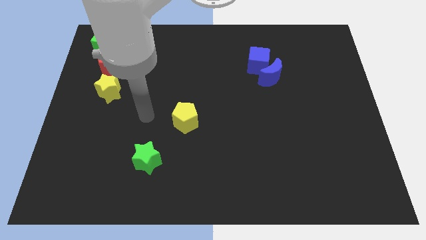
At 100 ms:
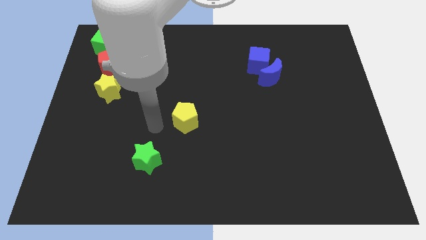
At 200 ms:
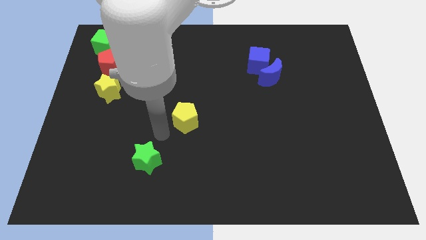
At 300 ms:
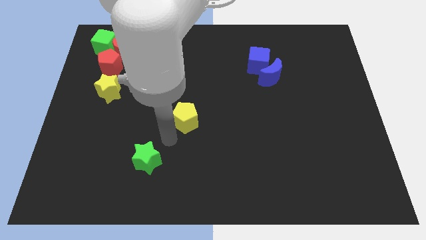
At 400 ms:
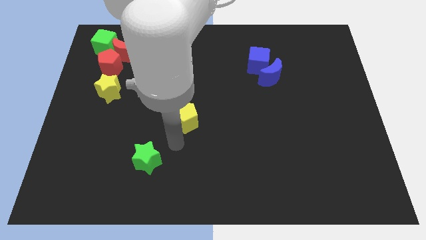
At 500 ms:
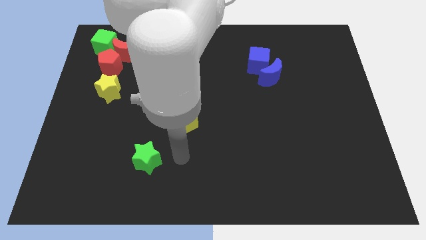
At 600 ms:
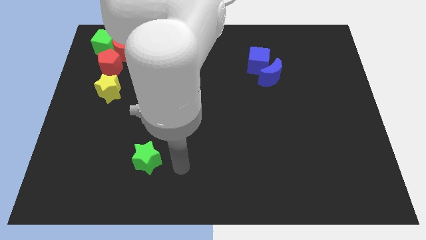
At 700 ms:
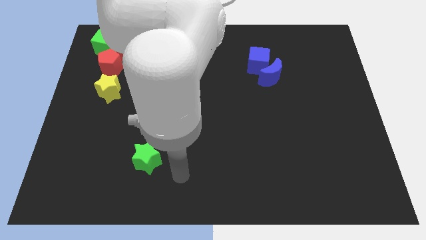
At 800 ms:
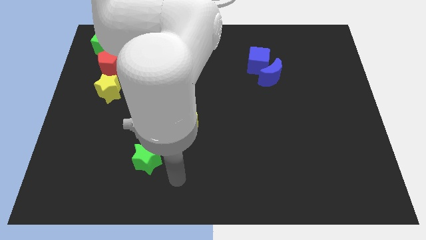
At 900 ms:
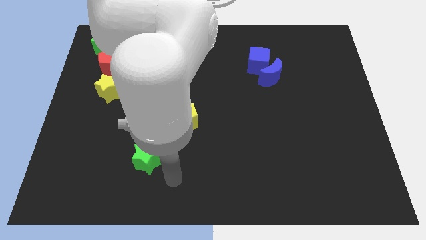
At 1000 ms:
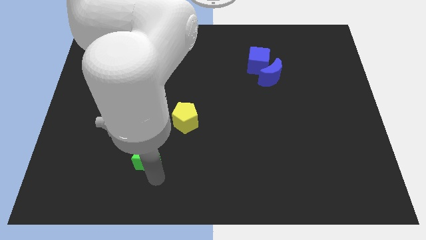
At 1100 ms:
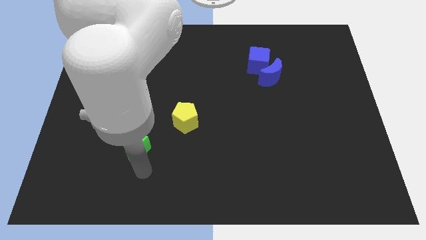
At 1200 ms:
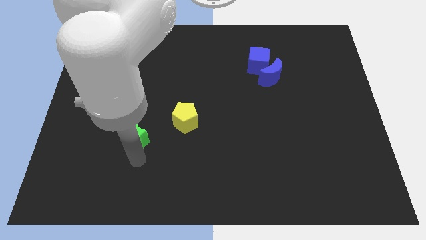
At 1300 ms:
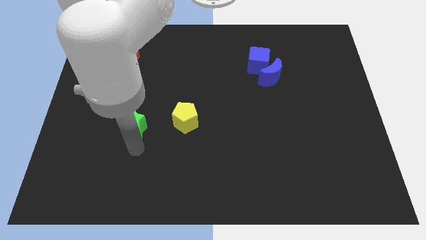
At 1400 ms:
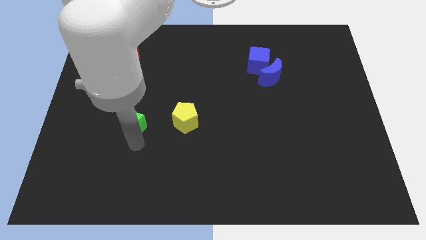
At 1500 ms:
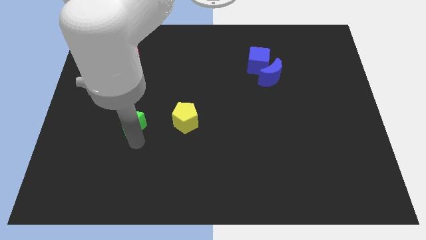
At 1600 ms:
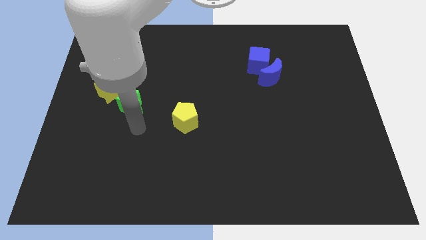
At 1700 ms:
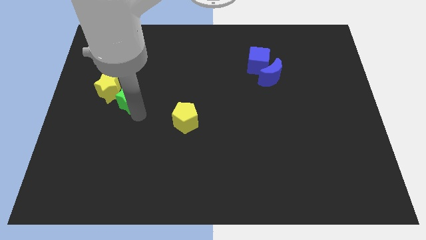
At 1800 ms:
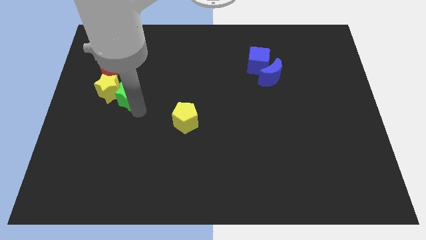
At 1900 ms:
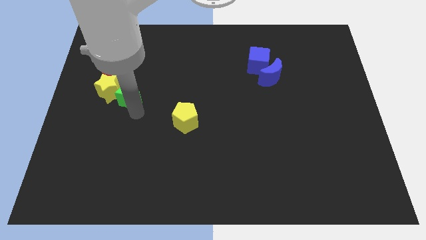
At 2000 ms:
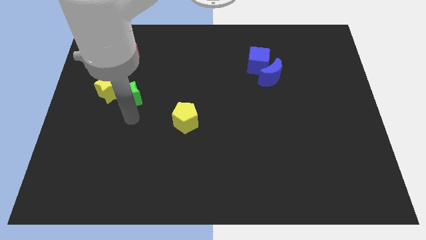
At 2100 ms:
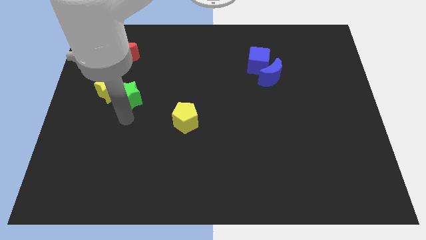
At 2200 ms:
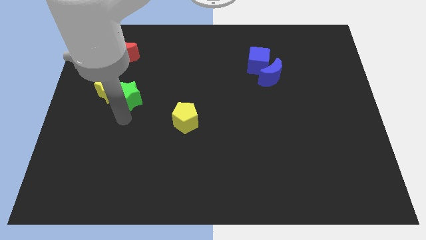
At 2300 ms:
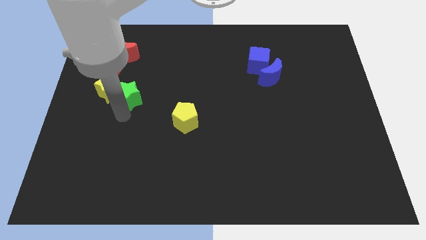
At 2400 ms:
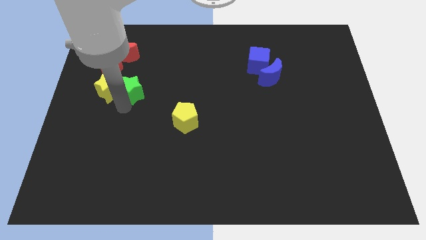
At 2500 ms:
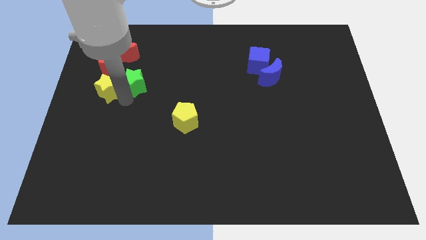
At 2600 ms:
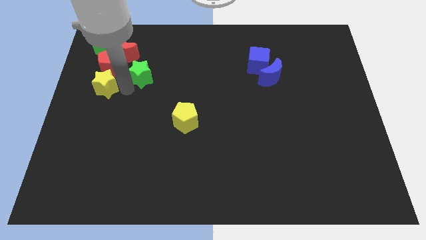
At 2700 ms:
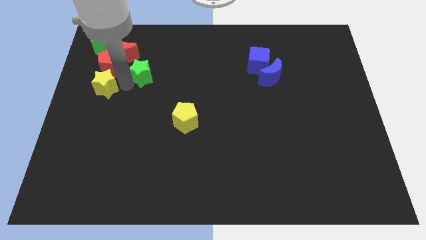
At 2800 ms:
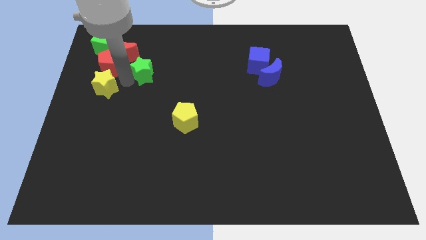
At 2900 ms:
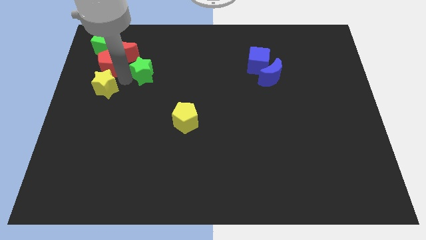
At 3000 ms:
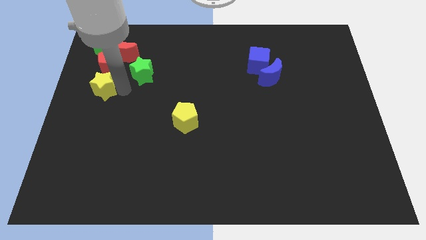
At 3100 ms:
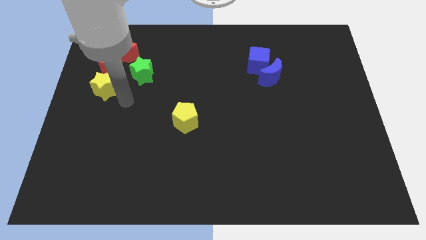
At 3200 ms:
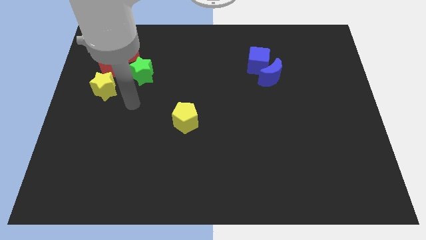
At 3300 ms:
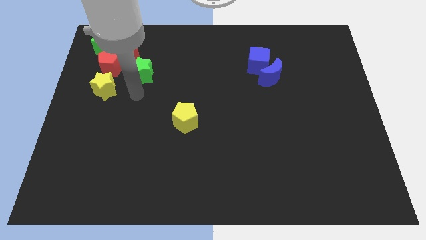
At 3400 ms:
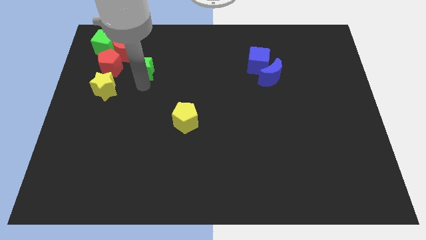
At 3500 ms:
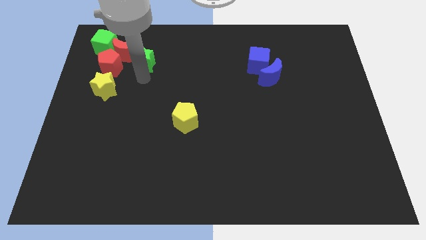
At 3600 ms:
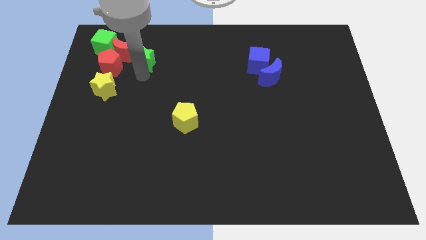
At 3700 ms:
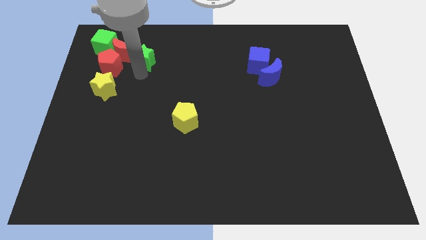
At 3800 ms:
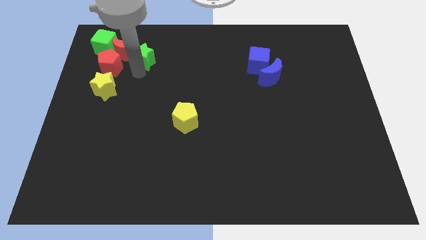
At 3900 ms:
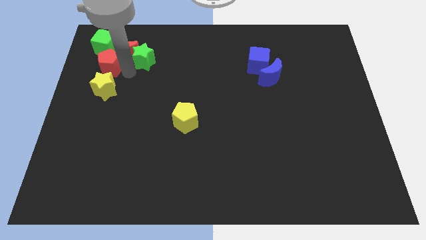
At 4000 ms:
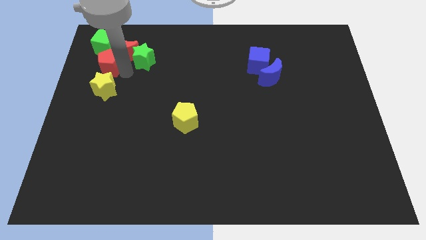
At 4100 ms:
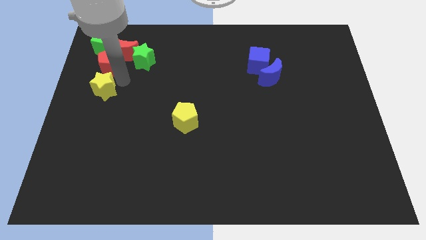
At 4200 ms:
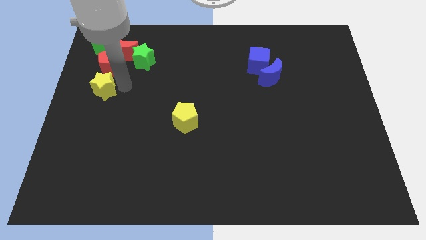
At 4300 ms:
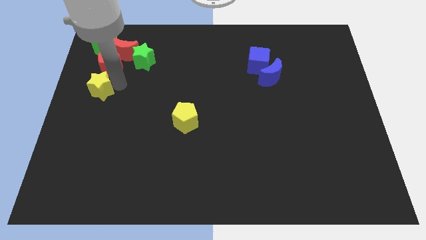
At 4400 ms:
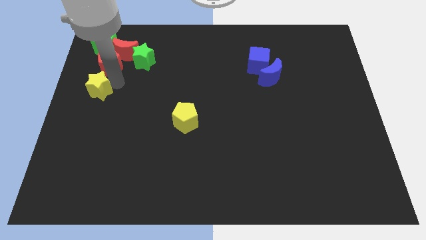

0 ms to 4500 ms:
push the green star towards the red crescent

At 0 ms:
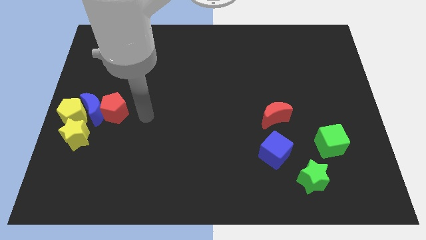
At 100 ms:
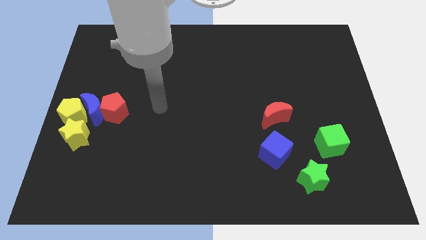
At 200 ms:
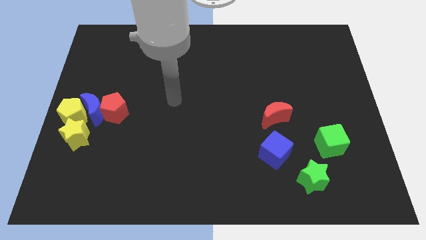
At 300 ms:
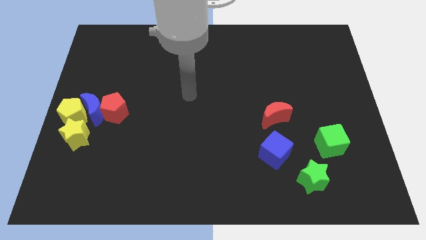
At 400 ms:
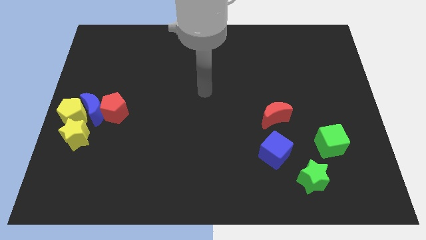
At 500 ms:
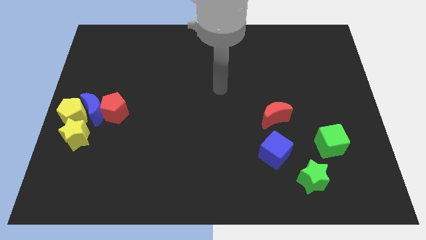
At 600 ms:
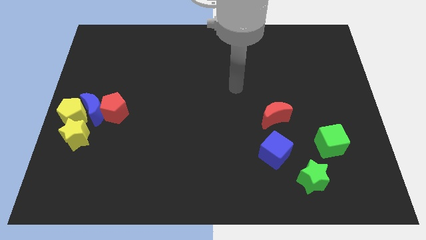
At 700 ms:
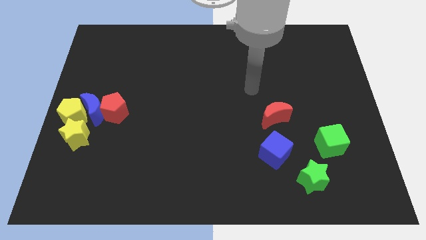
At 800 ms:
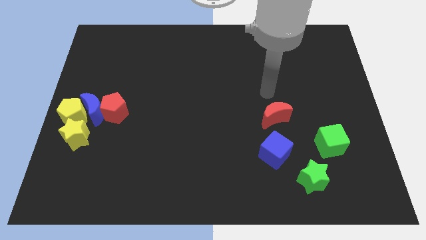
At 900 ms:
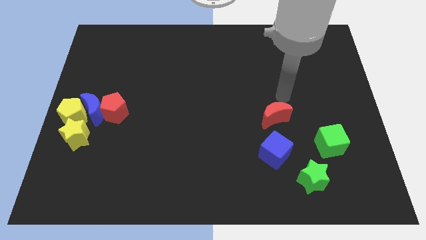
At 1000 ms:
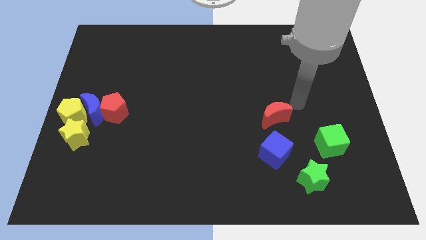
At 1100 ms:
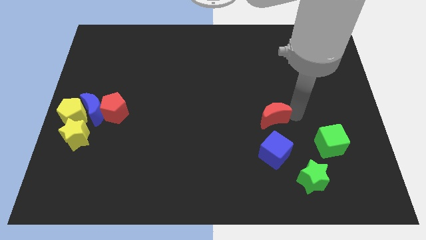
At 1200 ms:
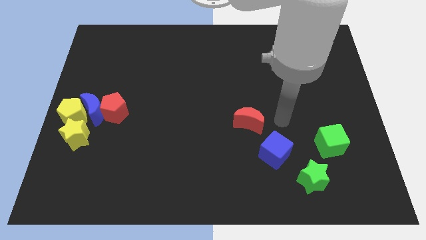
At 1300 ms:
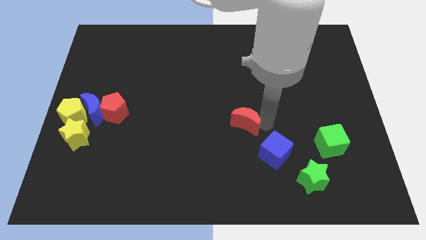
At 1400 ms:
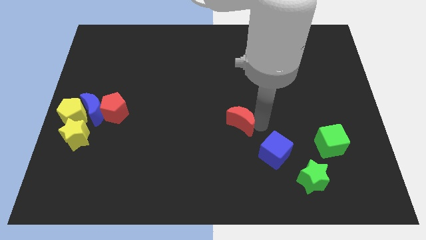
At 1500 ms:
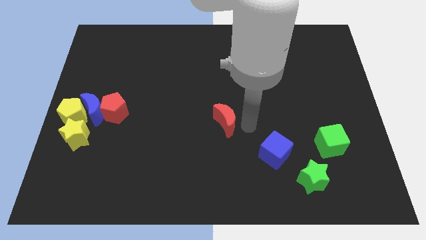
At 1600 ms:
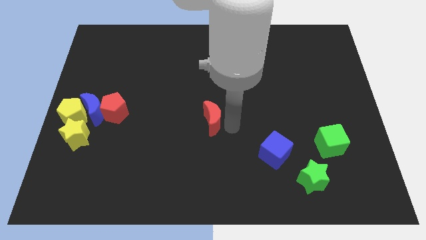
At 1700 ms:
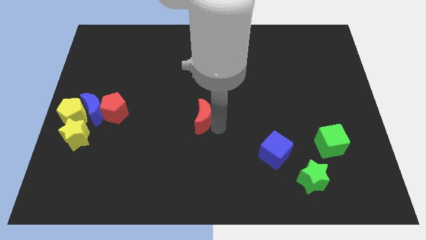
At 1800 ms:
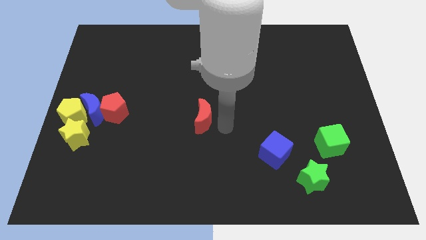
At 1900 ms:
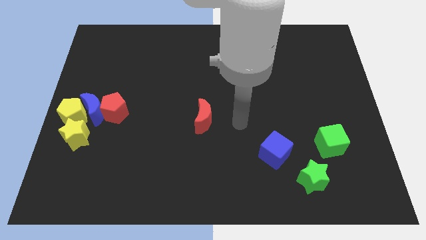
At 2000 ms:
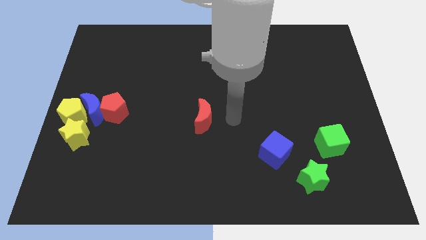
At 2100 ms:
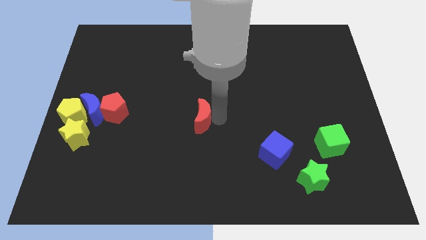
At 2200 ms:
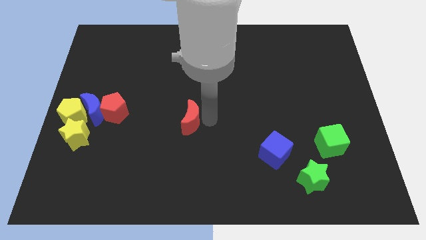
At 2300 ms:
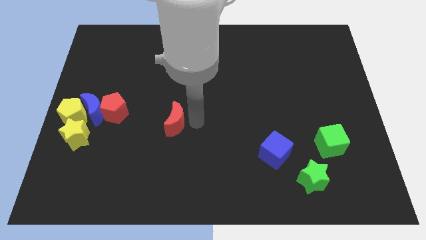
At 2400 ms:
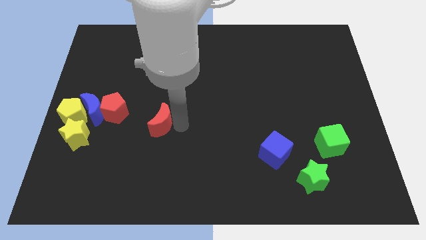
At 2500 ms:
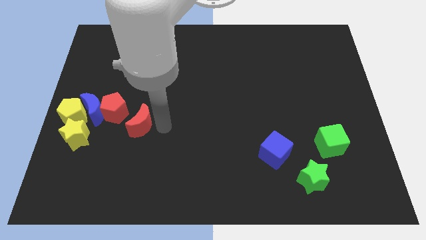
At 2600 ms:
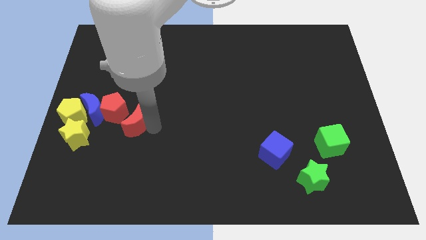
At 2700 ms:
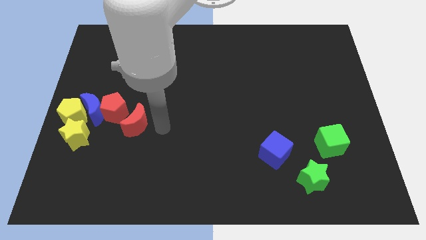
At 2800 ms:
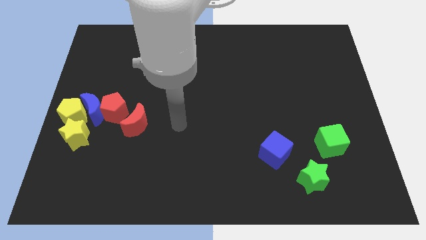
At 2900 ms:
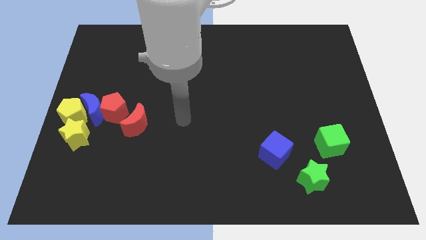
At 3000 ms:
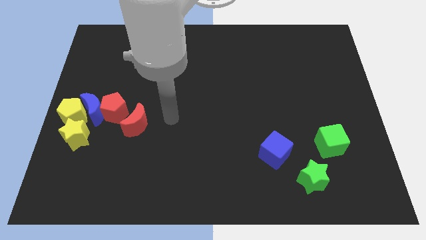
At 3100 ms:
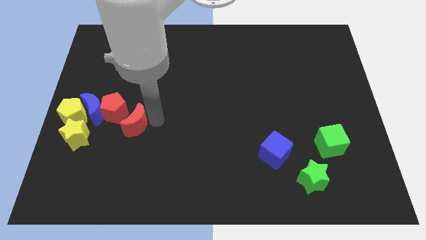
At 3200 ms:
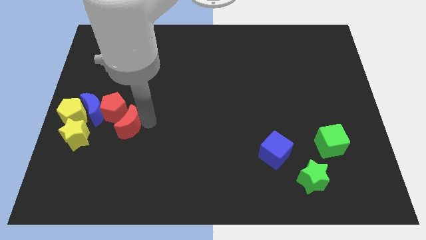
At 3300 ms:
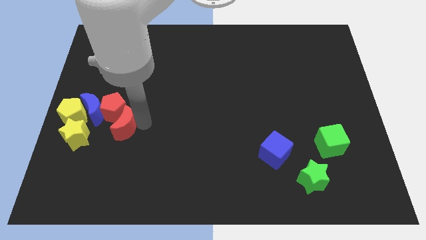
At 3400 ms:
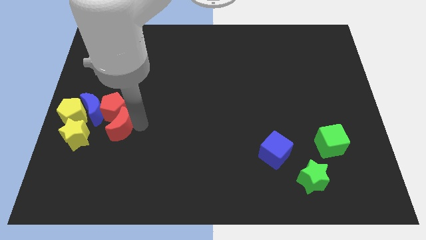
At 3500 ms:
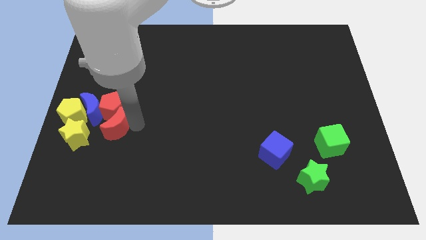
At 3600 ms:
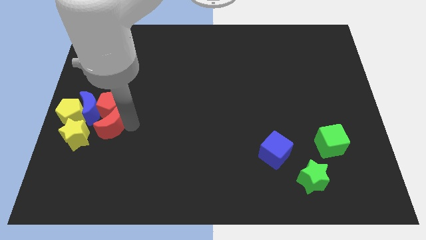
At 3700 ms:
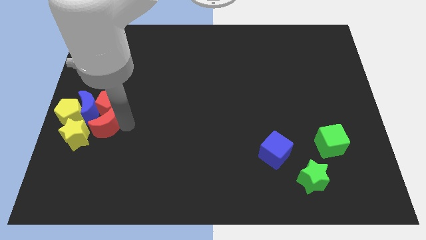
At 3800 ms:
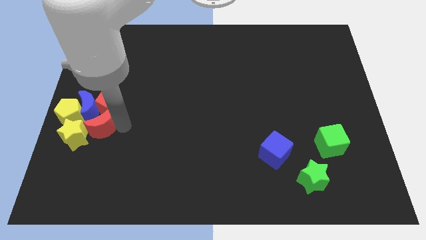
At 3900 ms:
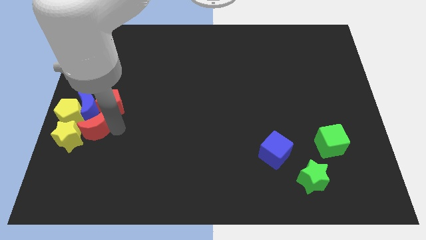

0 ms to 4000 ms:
move the red crescent into the group of blocks

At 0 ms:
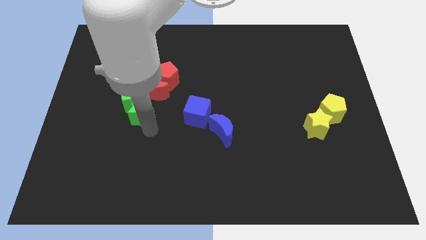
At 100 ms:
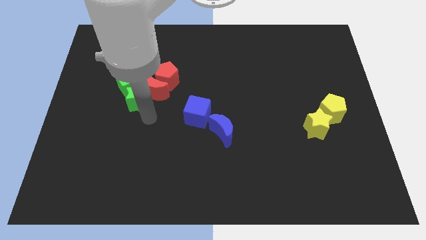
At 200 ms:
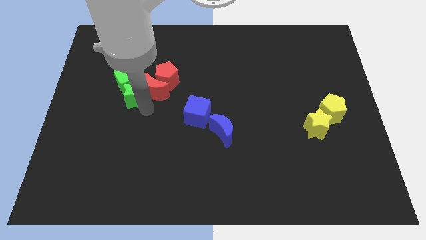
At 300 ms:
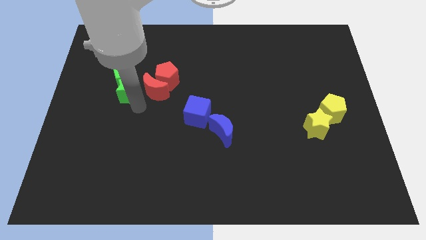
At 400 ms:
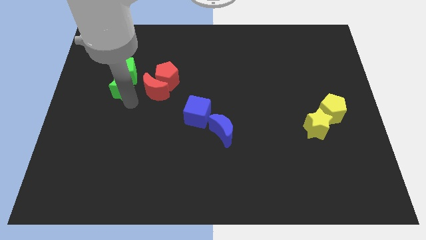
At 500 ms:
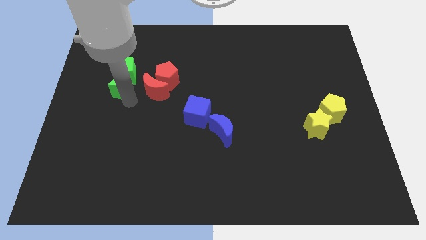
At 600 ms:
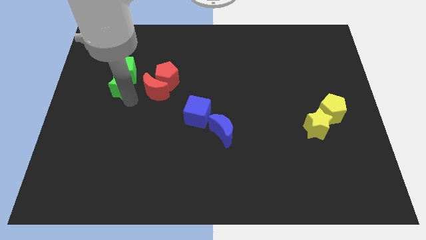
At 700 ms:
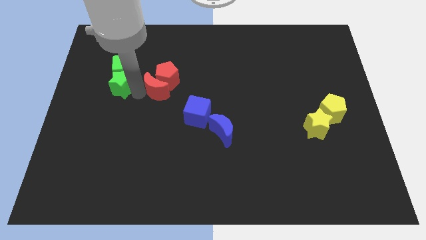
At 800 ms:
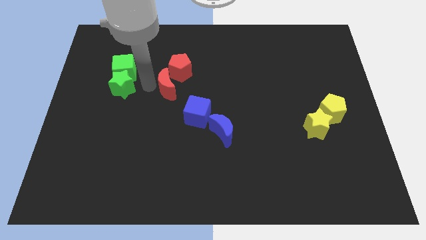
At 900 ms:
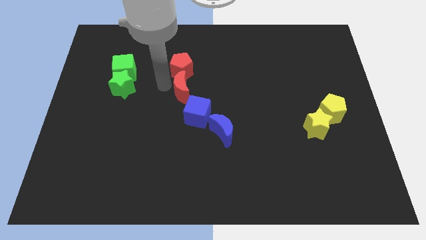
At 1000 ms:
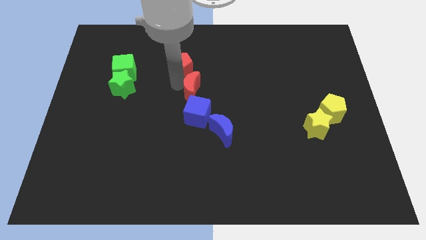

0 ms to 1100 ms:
drag green star and green cube upwards
